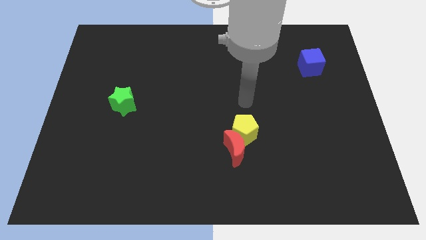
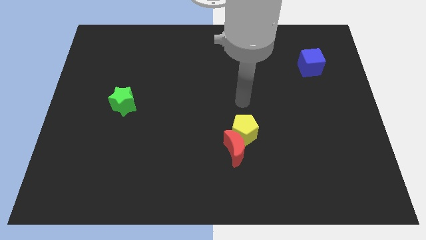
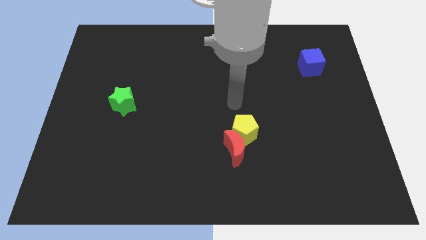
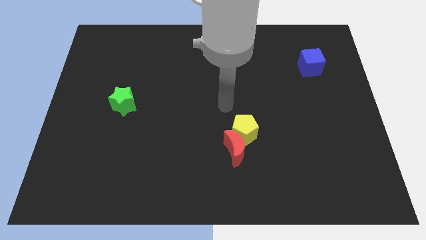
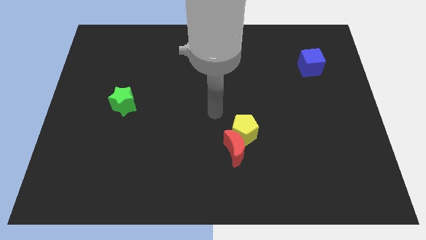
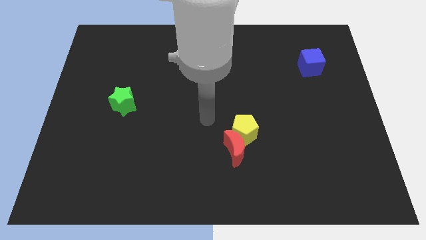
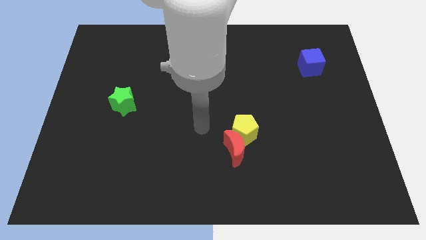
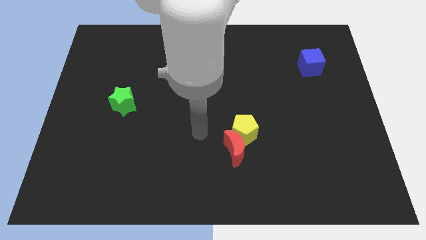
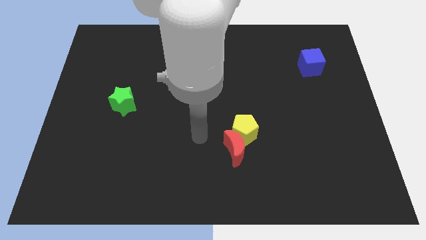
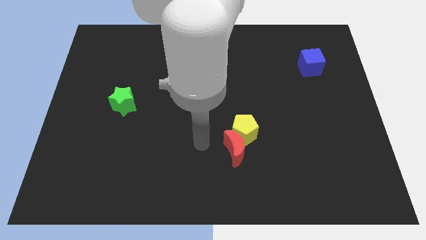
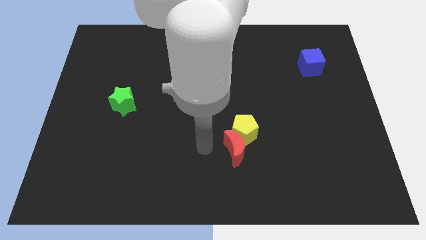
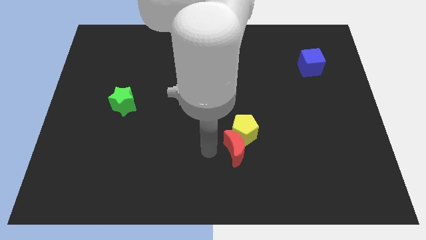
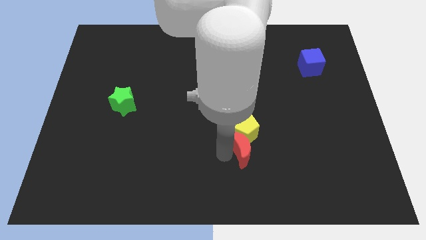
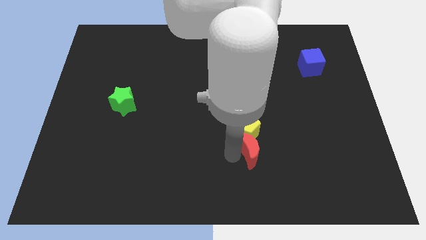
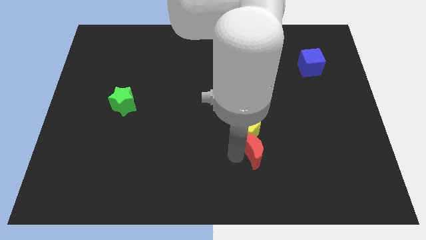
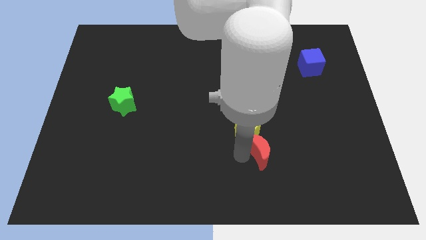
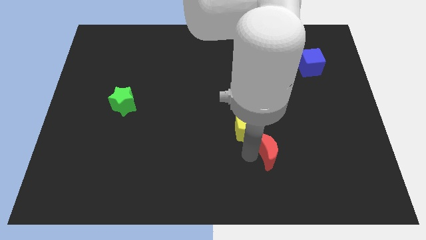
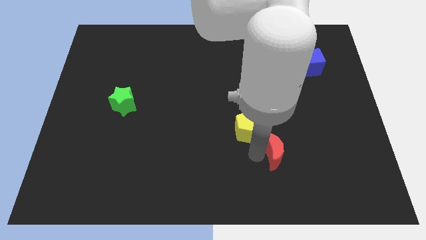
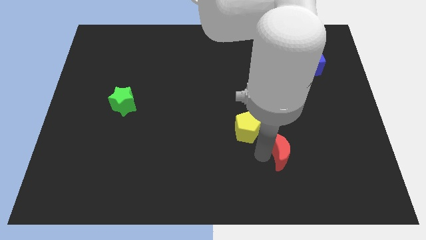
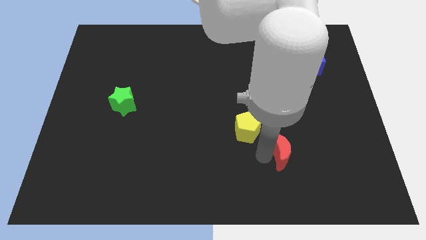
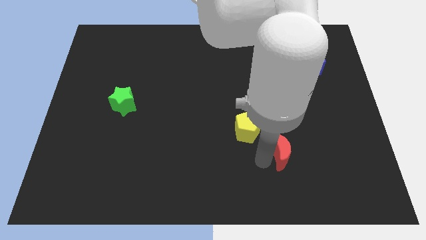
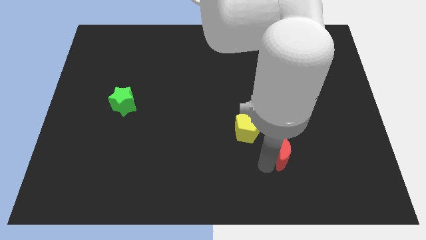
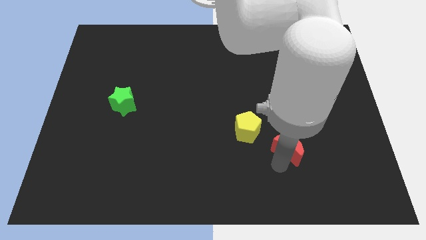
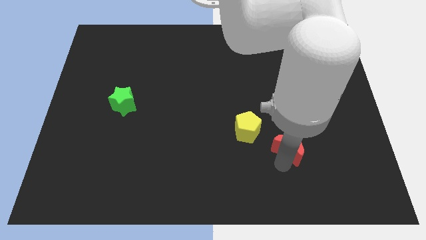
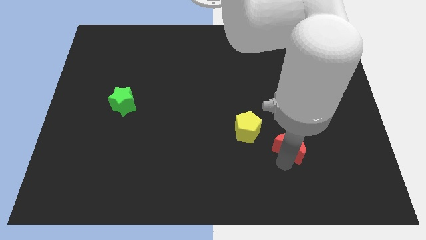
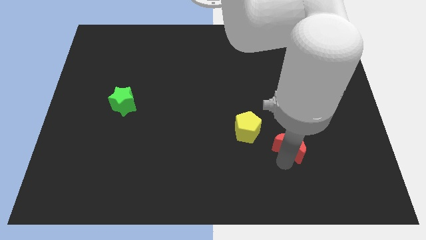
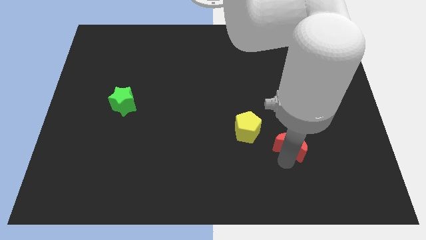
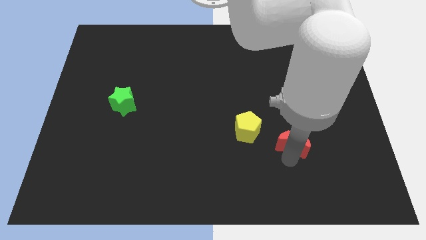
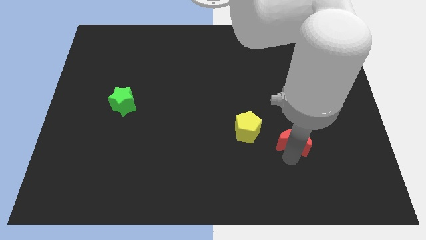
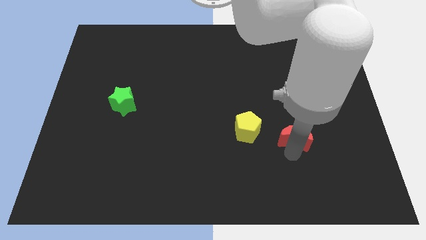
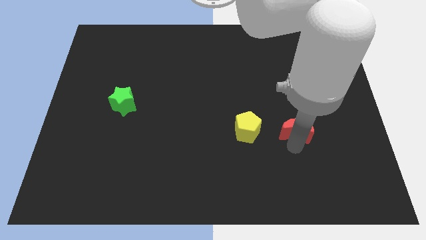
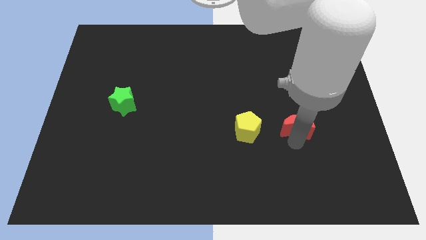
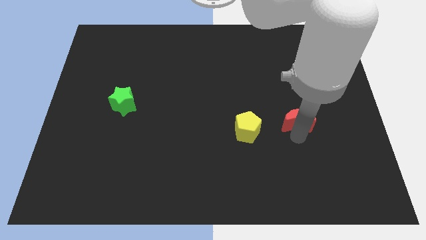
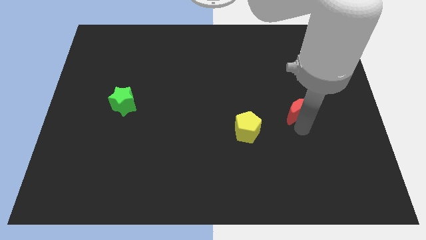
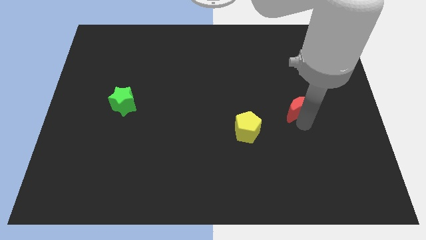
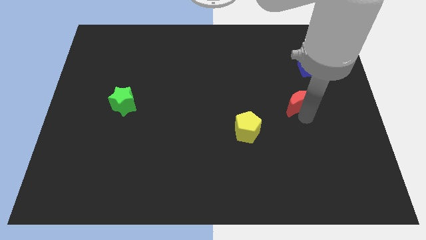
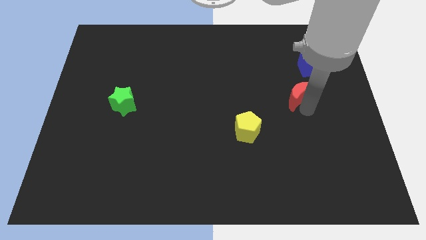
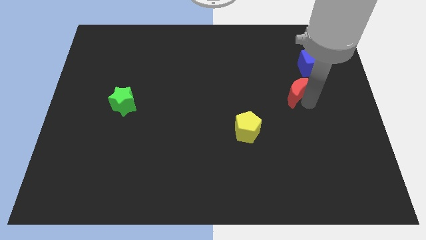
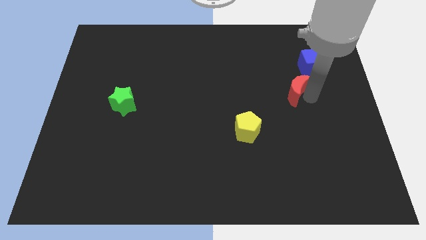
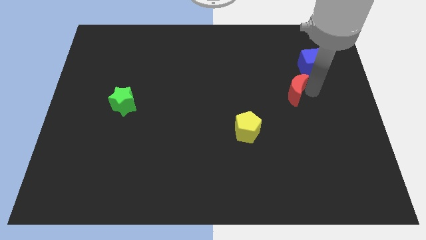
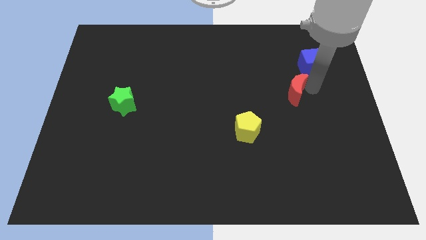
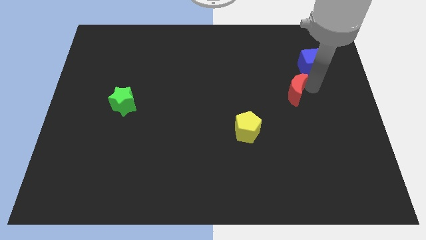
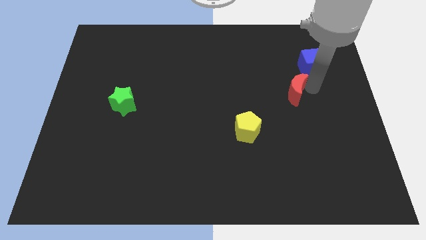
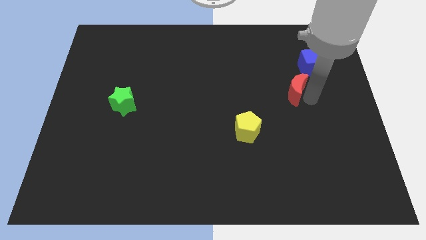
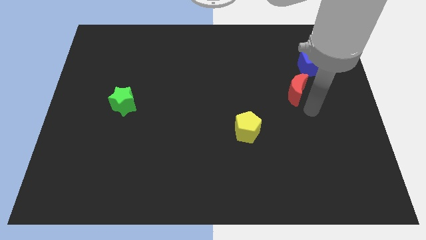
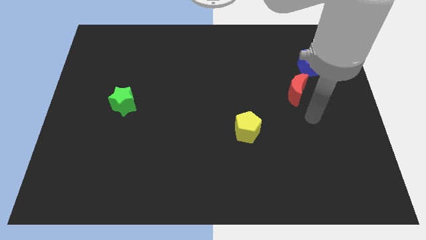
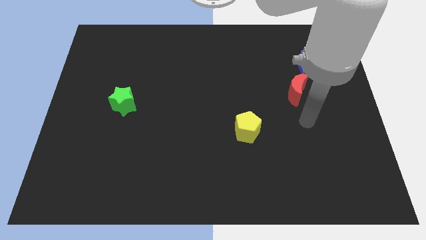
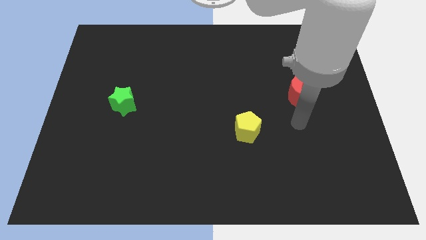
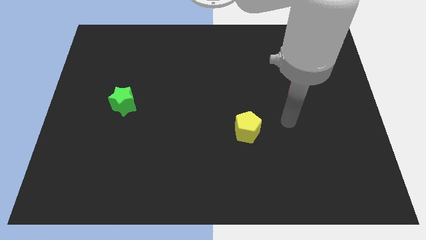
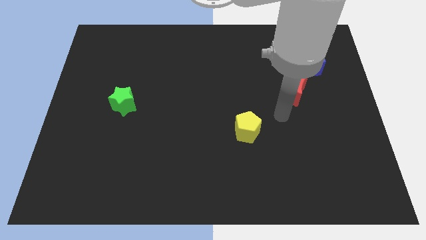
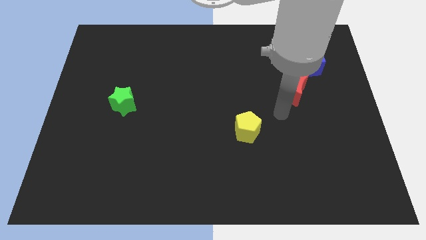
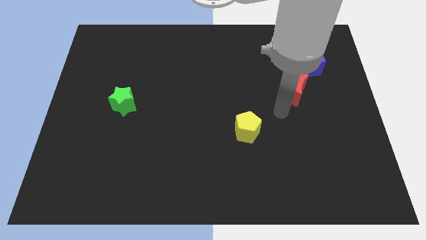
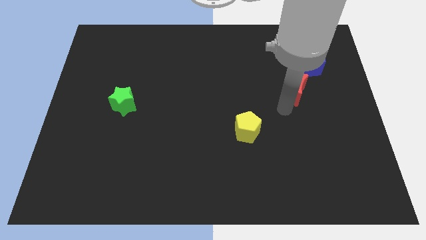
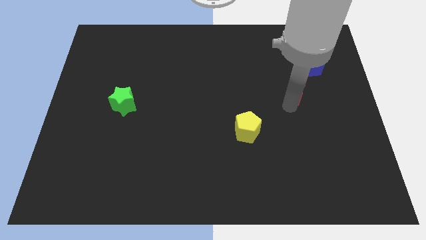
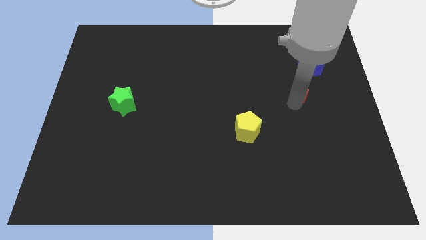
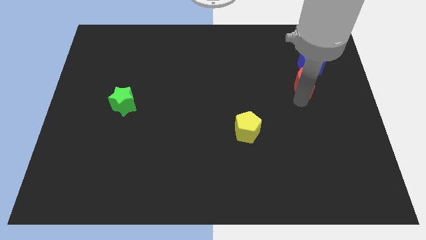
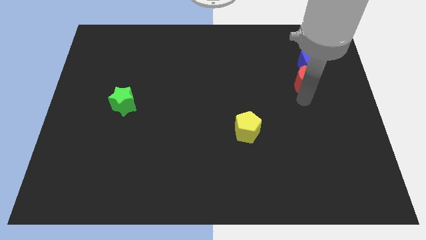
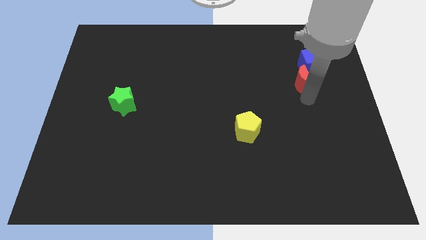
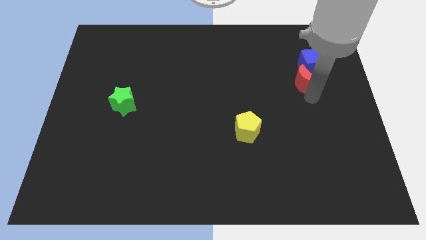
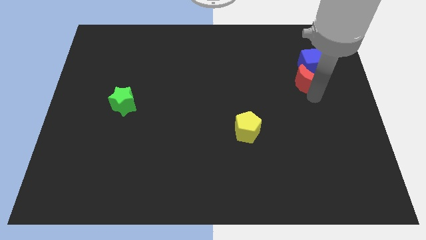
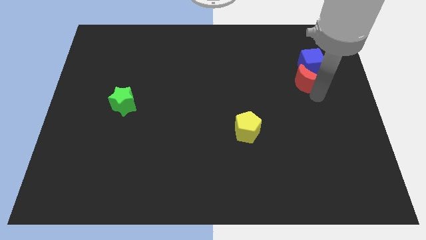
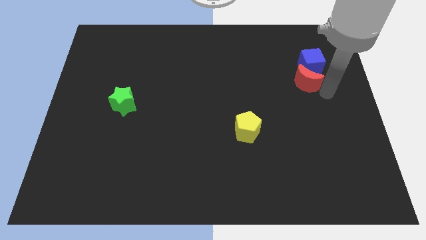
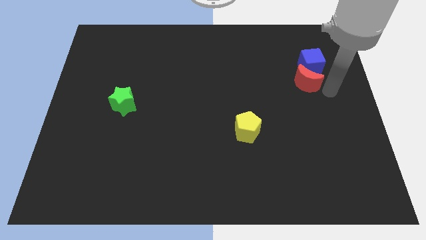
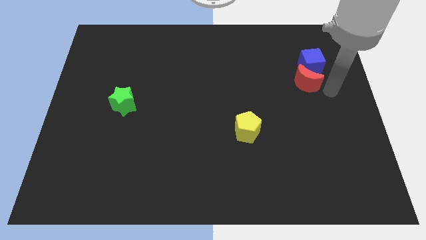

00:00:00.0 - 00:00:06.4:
move the red block towards the blue cube

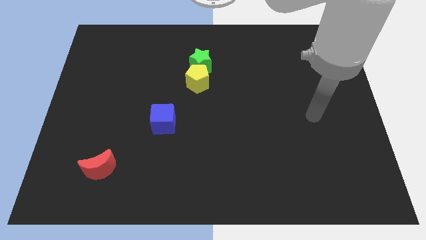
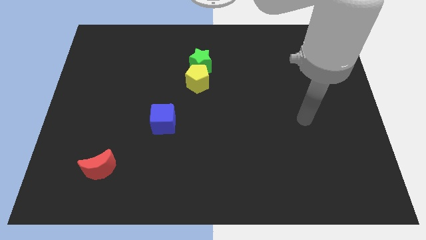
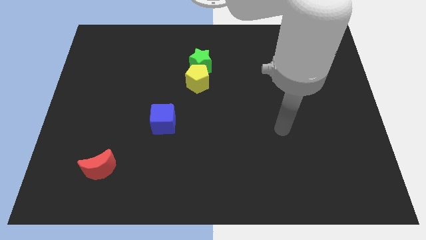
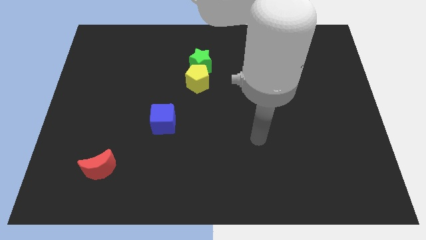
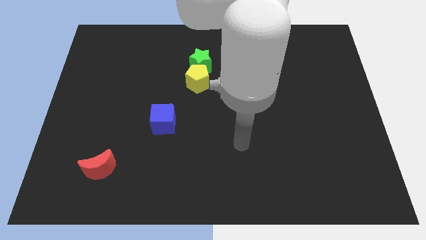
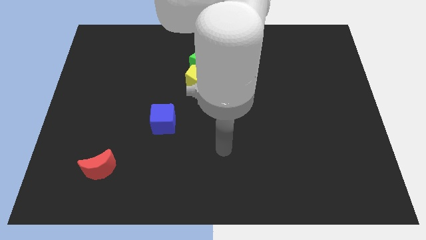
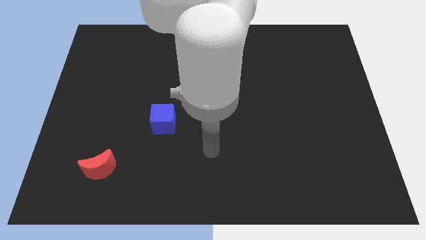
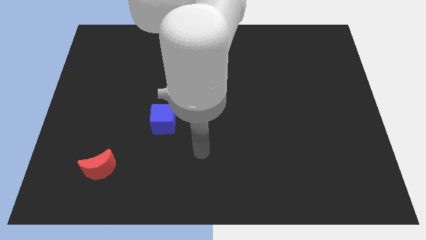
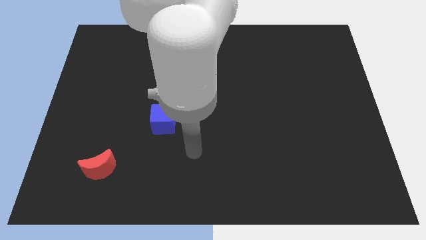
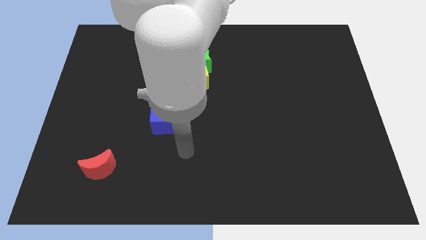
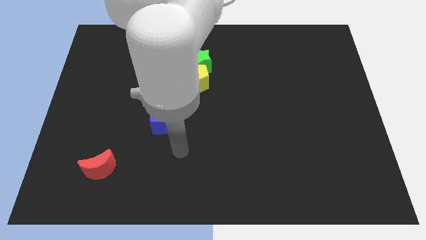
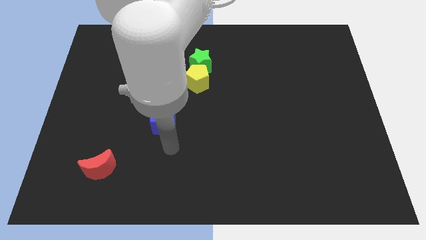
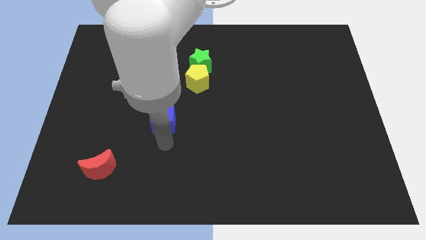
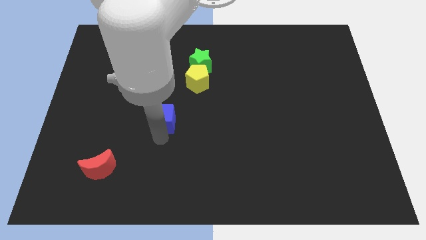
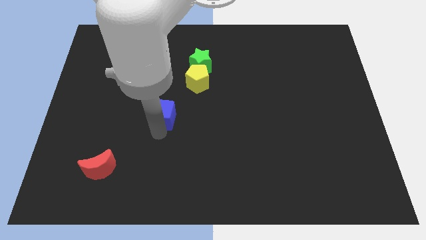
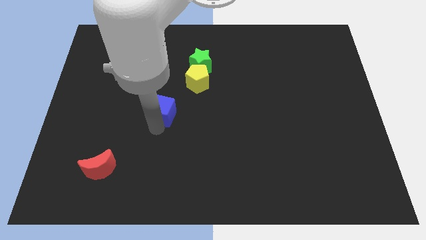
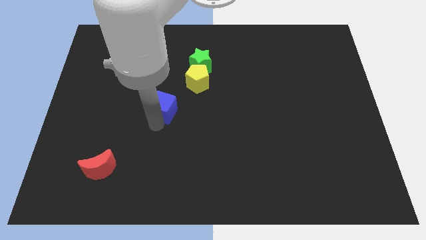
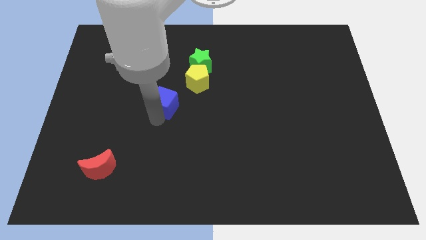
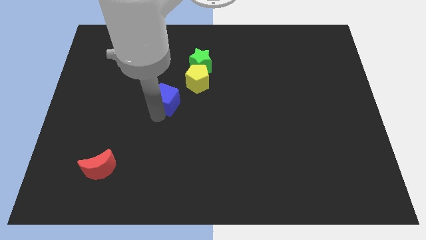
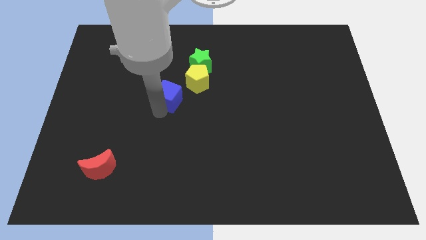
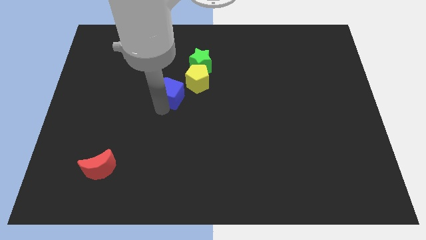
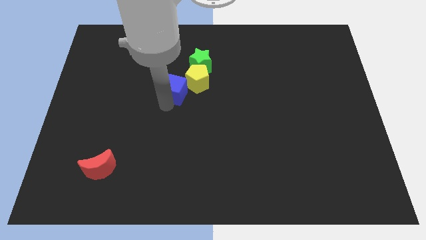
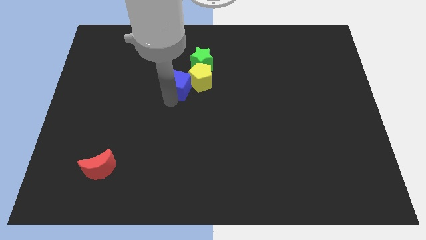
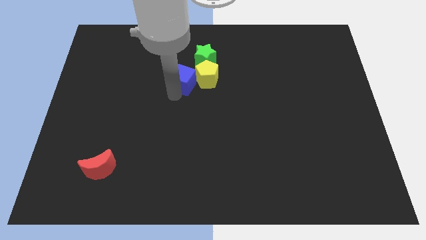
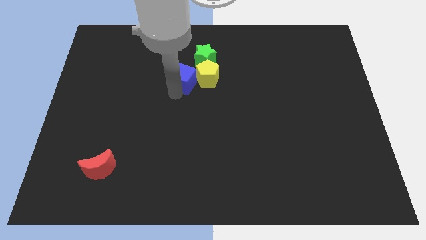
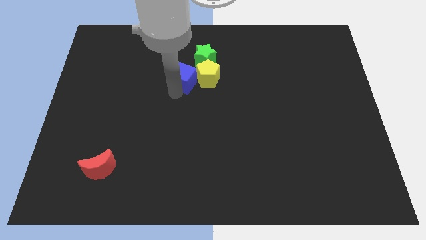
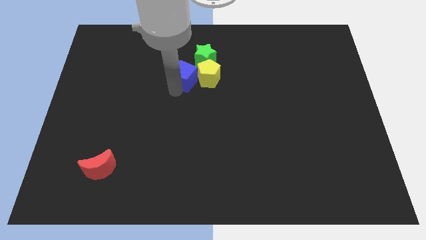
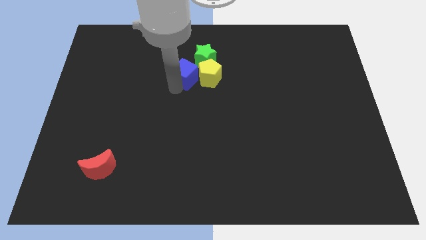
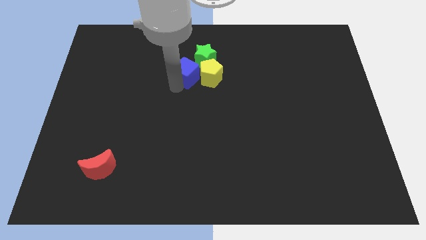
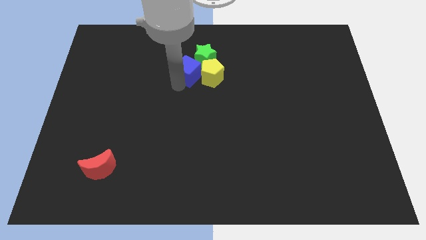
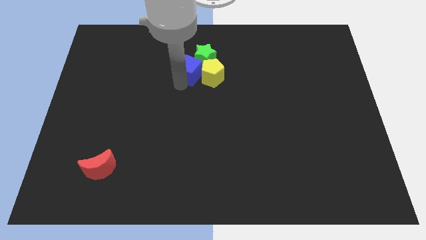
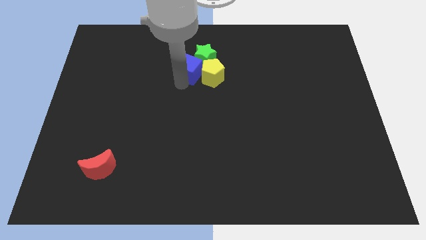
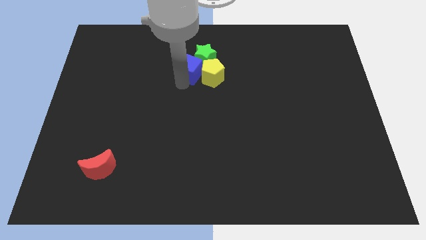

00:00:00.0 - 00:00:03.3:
put the blue cube close to the green block
